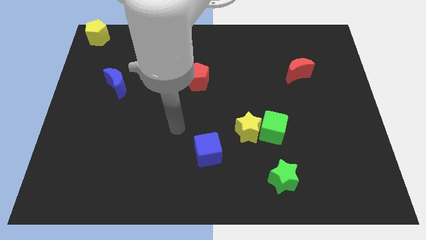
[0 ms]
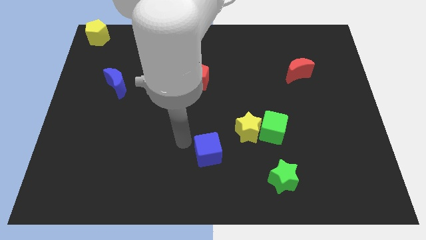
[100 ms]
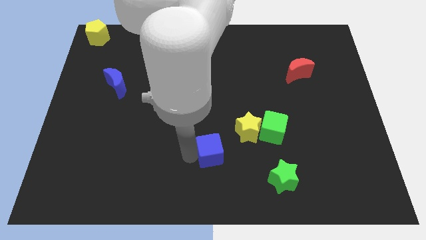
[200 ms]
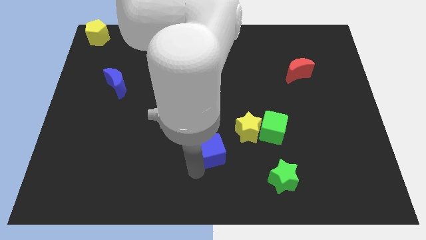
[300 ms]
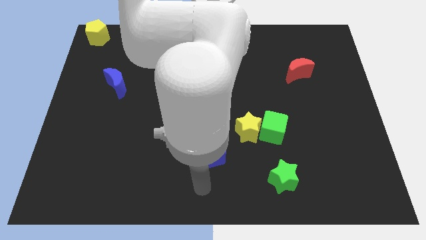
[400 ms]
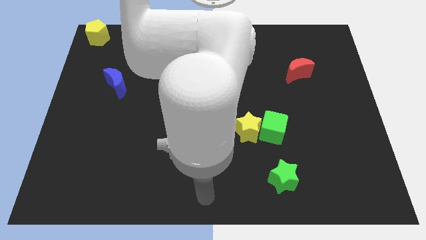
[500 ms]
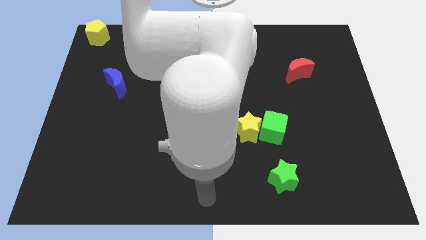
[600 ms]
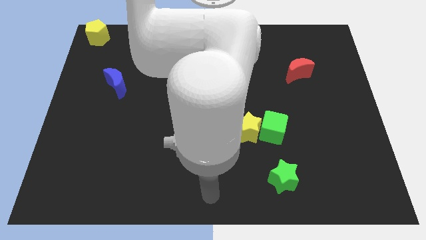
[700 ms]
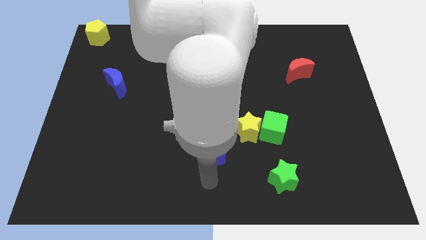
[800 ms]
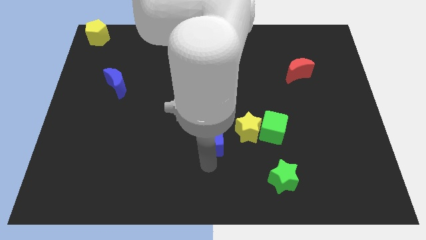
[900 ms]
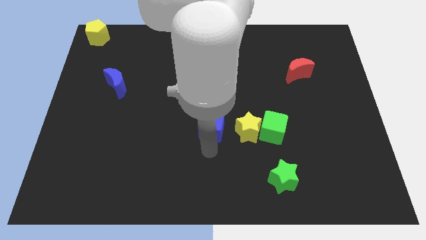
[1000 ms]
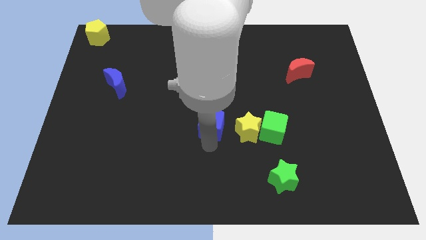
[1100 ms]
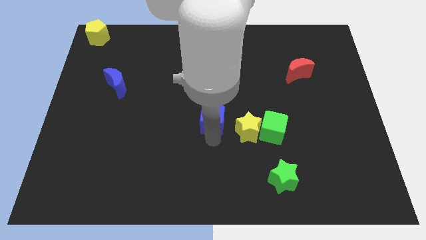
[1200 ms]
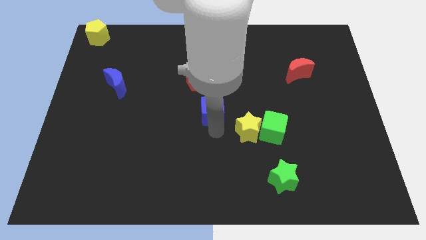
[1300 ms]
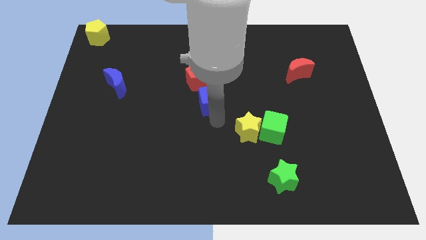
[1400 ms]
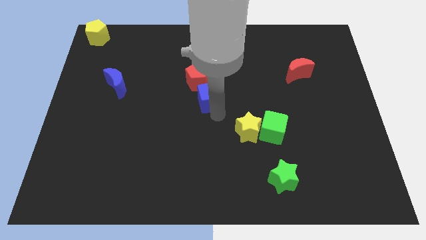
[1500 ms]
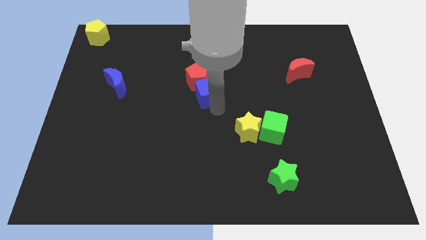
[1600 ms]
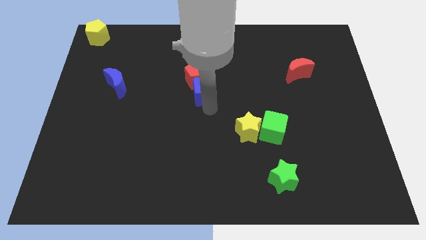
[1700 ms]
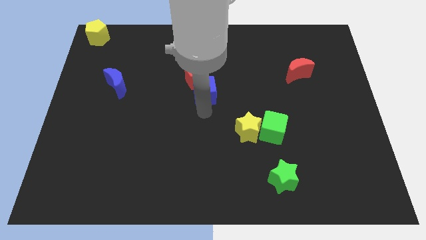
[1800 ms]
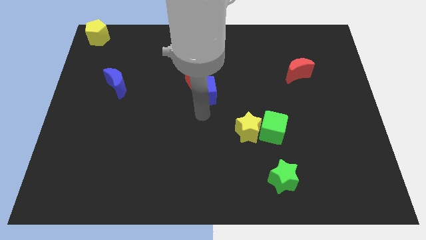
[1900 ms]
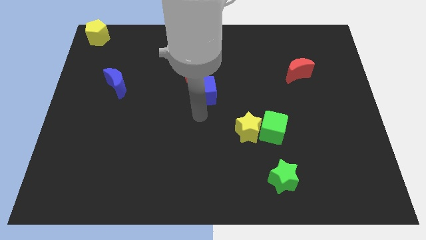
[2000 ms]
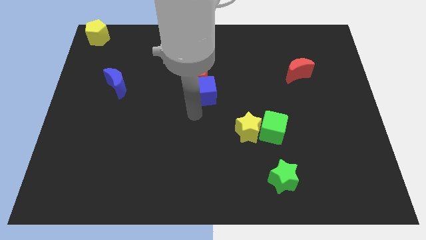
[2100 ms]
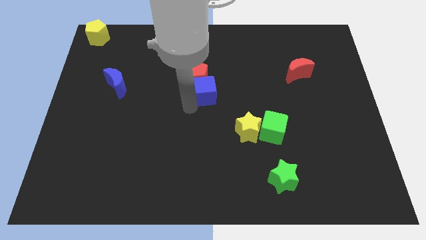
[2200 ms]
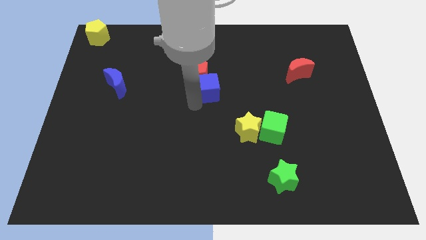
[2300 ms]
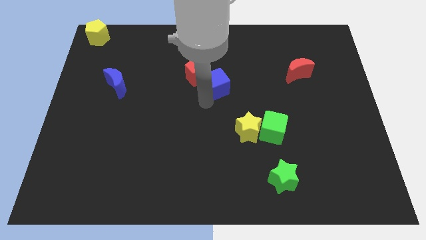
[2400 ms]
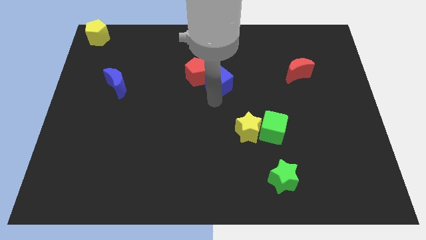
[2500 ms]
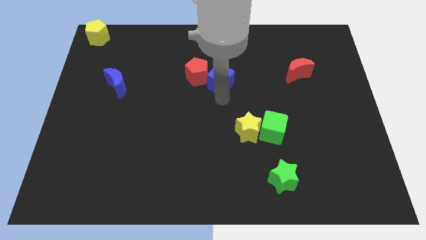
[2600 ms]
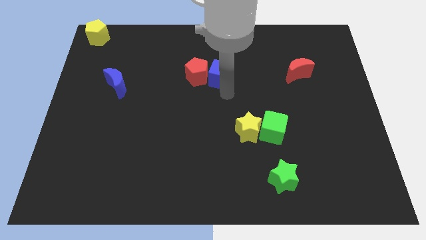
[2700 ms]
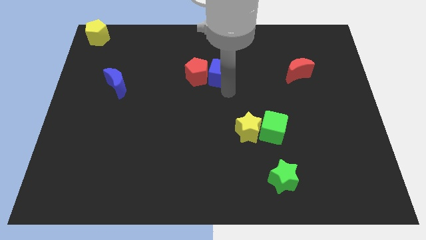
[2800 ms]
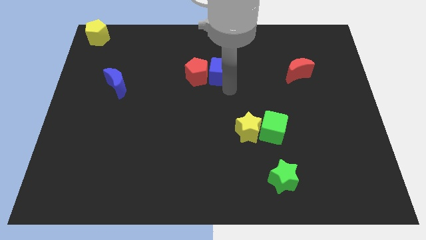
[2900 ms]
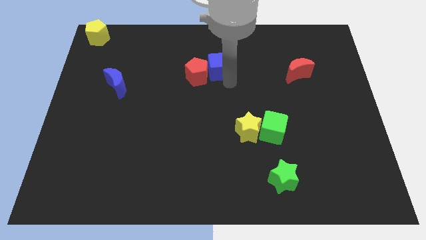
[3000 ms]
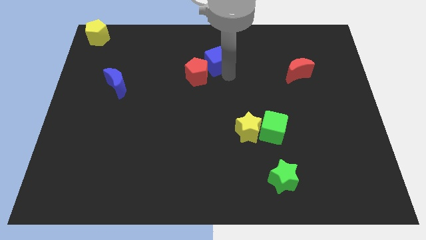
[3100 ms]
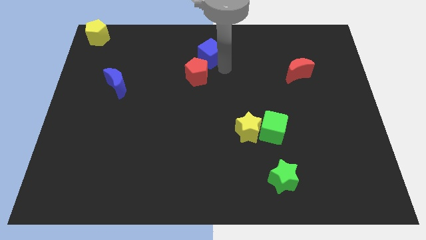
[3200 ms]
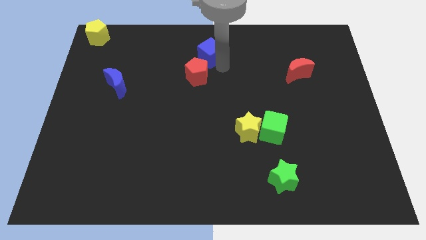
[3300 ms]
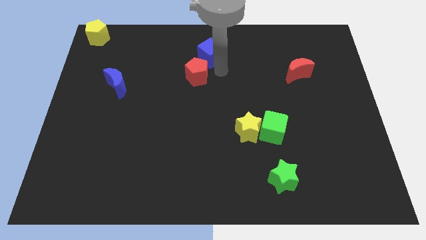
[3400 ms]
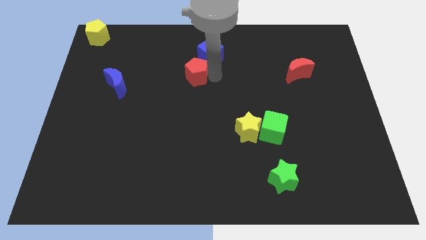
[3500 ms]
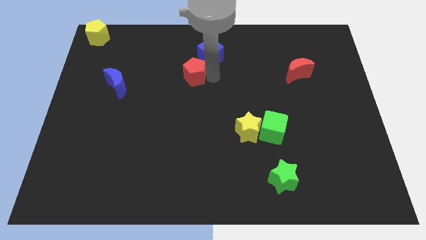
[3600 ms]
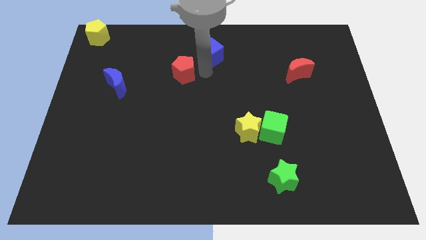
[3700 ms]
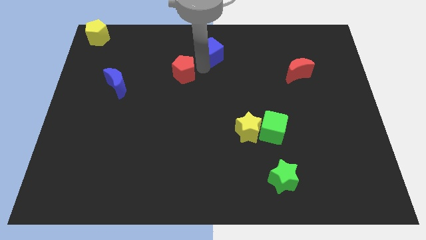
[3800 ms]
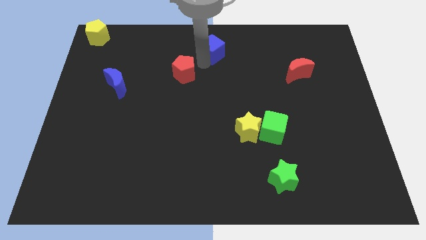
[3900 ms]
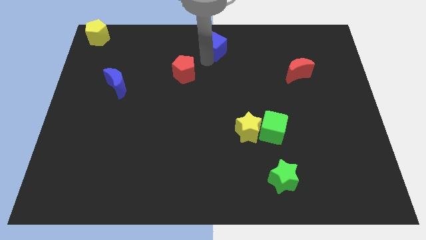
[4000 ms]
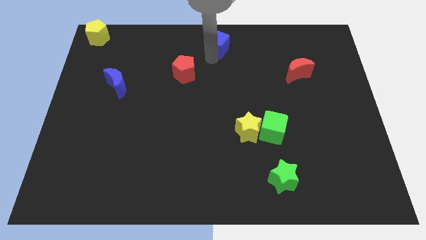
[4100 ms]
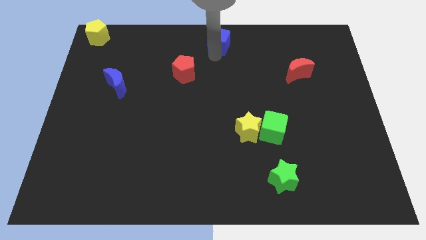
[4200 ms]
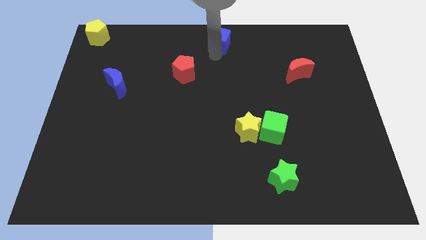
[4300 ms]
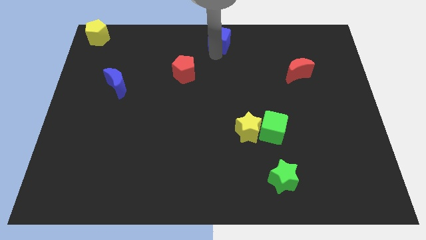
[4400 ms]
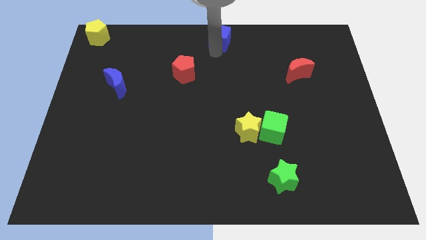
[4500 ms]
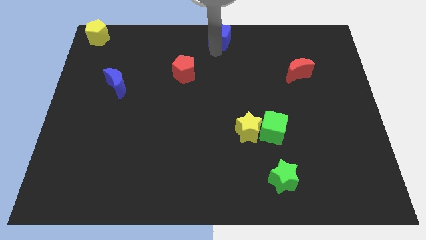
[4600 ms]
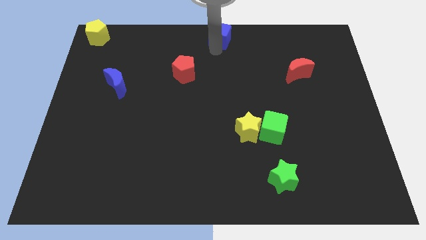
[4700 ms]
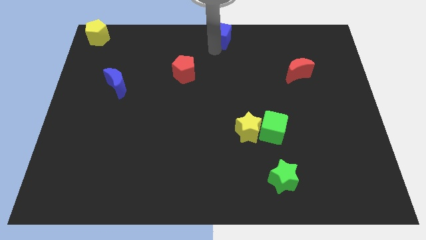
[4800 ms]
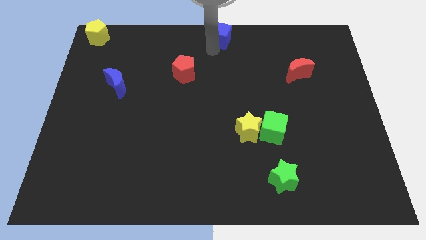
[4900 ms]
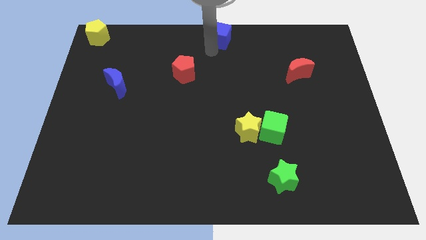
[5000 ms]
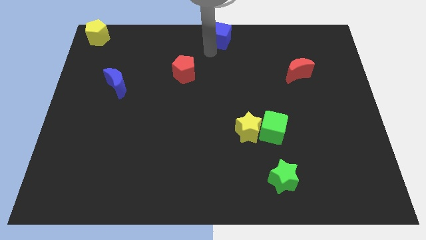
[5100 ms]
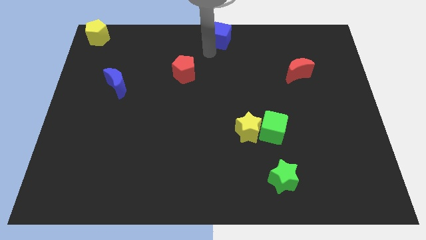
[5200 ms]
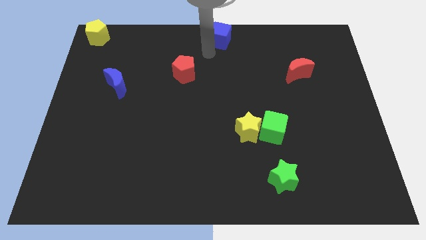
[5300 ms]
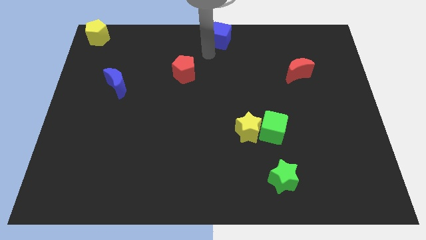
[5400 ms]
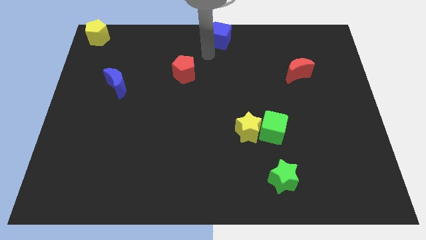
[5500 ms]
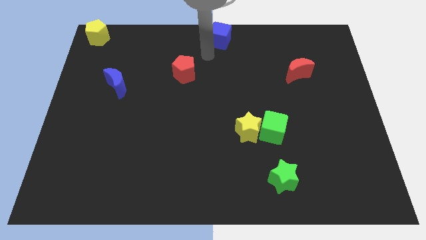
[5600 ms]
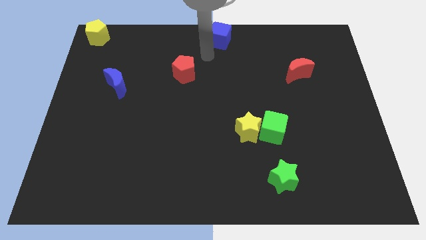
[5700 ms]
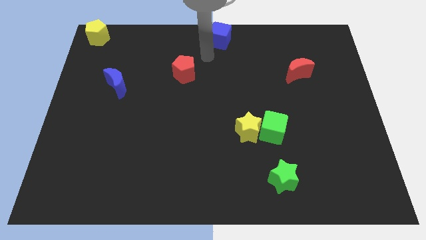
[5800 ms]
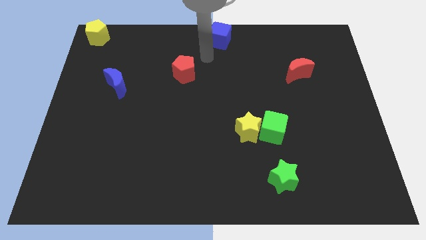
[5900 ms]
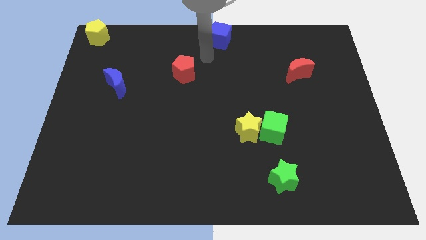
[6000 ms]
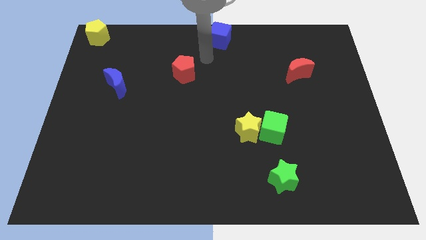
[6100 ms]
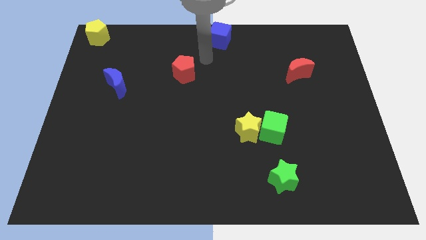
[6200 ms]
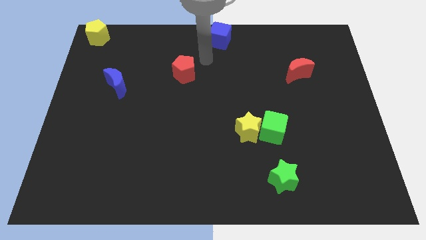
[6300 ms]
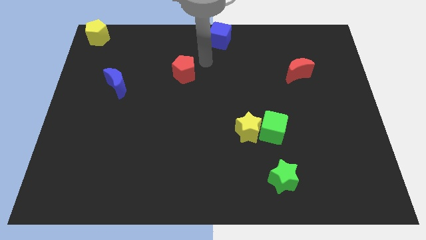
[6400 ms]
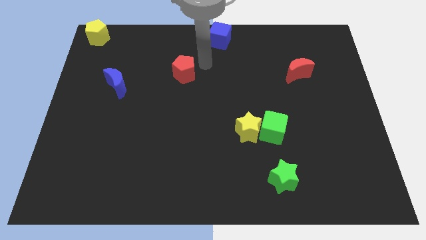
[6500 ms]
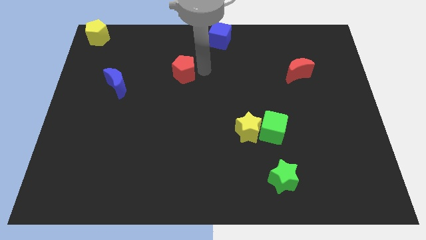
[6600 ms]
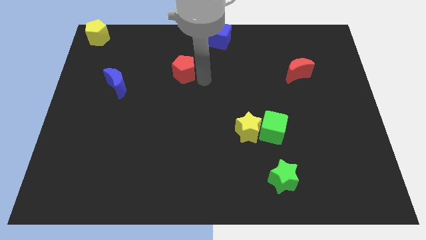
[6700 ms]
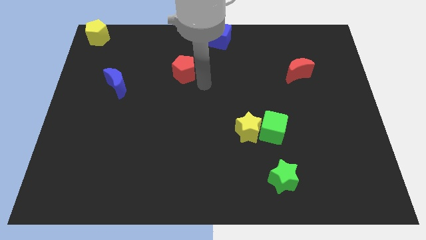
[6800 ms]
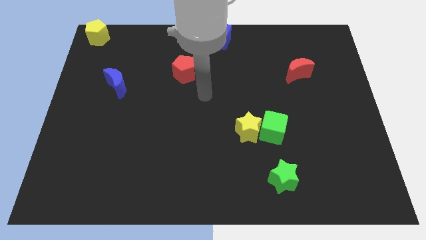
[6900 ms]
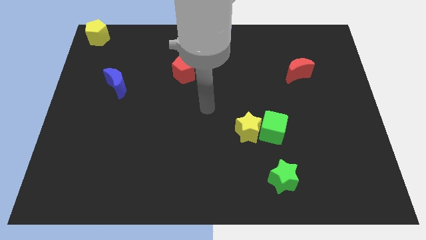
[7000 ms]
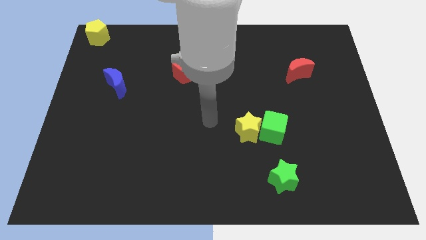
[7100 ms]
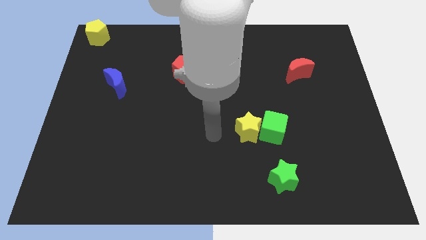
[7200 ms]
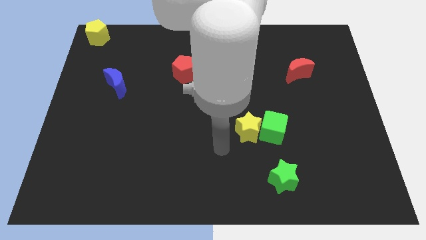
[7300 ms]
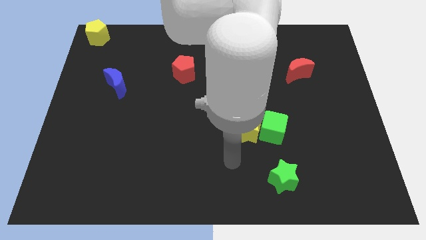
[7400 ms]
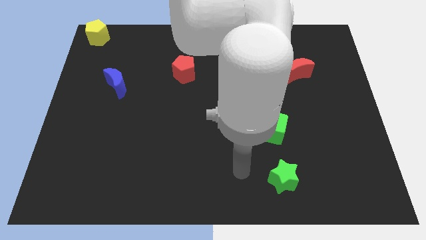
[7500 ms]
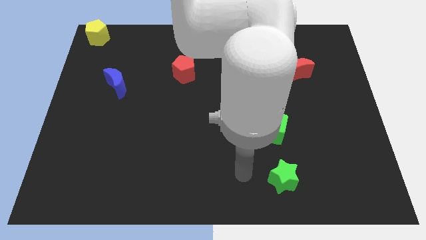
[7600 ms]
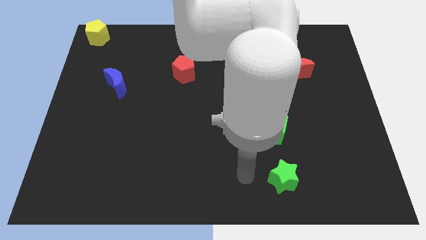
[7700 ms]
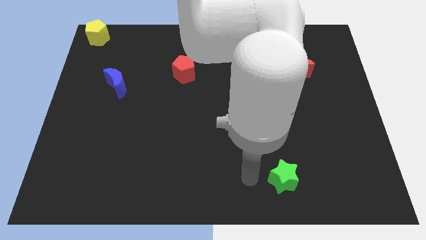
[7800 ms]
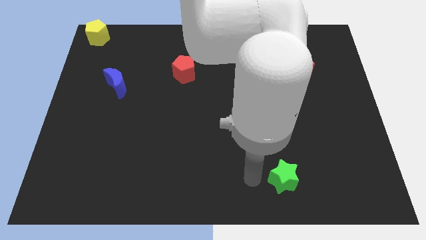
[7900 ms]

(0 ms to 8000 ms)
place blue block at the top center of the board

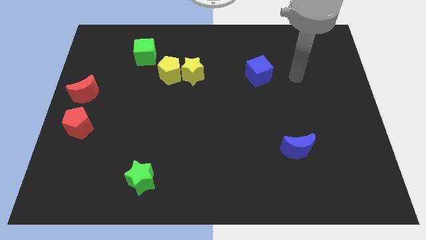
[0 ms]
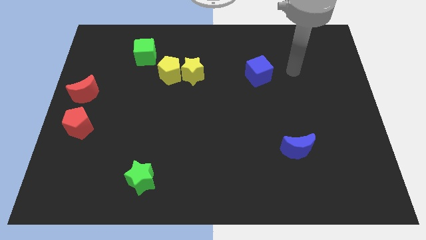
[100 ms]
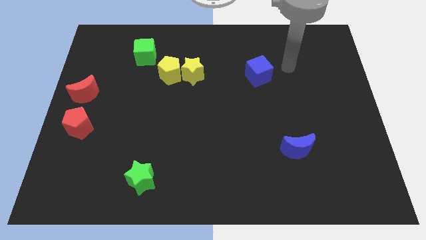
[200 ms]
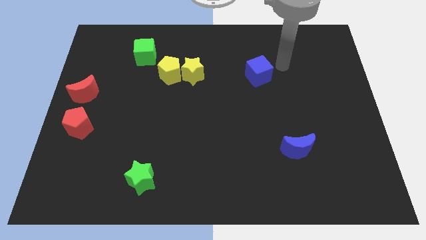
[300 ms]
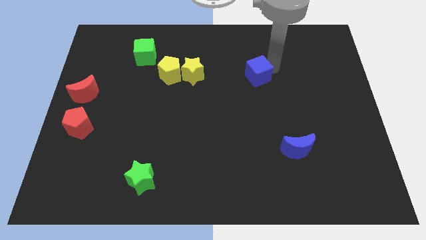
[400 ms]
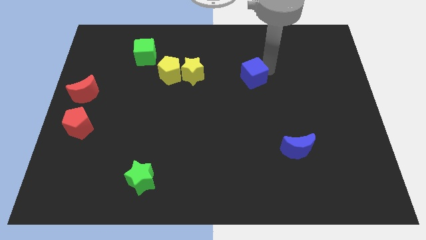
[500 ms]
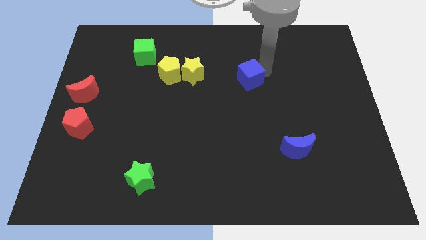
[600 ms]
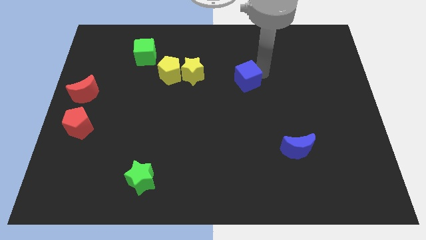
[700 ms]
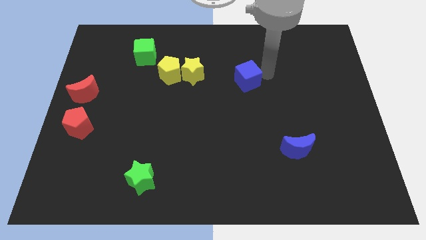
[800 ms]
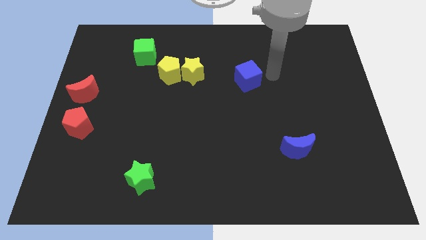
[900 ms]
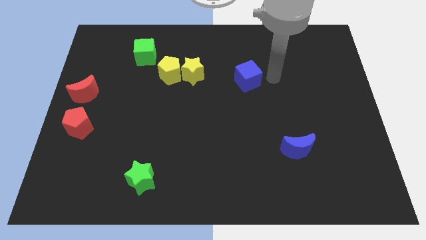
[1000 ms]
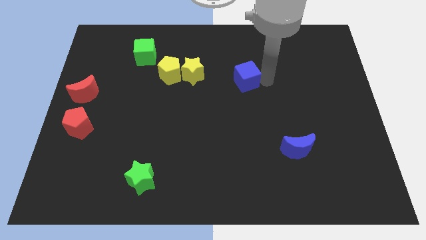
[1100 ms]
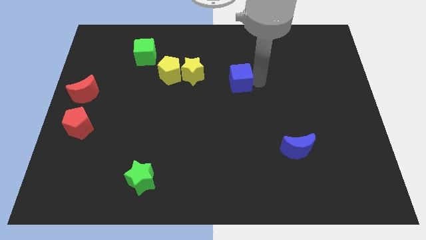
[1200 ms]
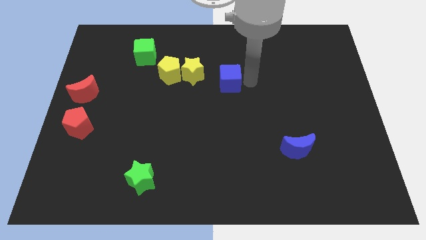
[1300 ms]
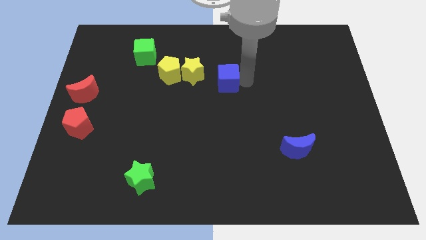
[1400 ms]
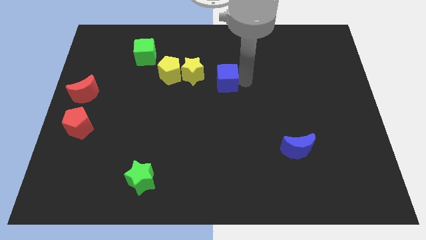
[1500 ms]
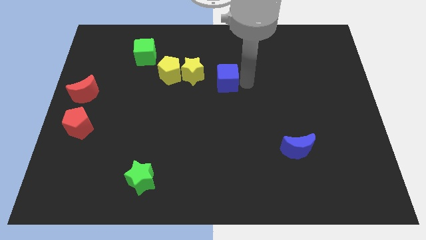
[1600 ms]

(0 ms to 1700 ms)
move the blue cube slightly to the left
